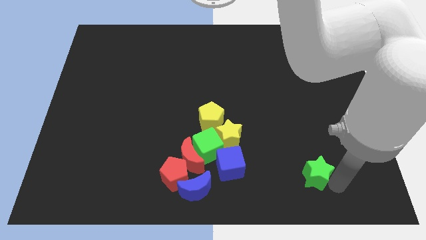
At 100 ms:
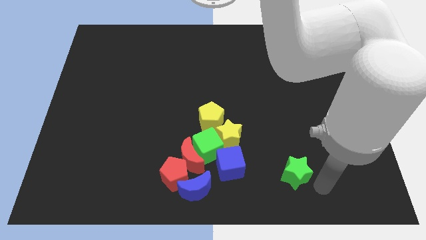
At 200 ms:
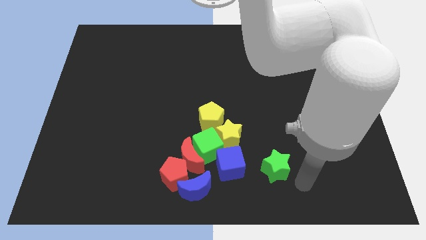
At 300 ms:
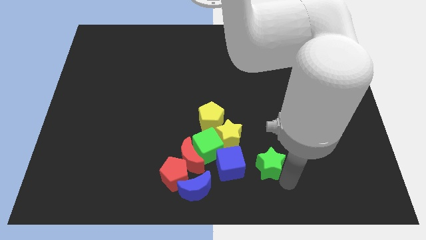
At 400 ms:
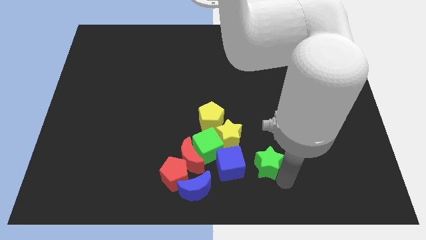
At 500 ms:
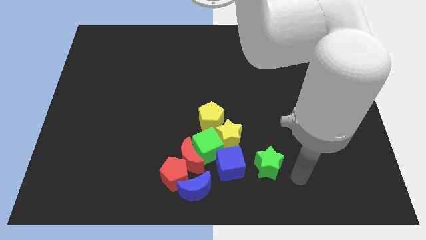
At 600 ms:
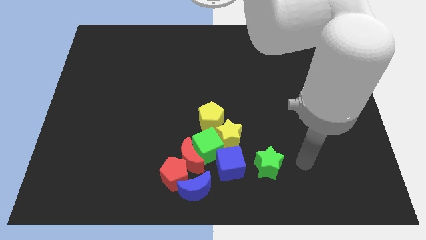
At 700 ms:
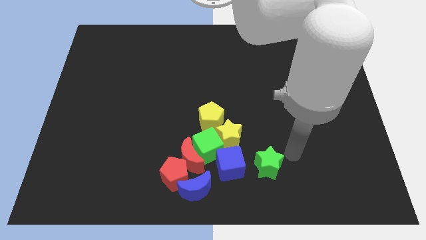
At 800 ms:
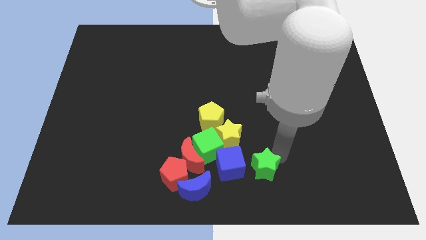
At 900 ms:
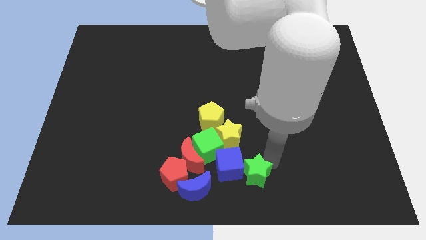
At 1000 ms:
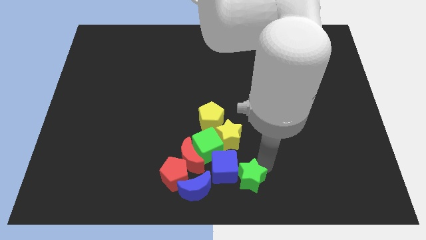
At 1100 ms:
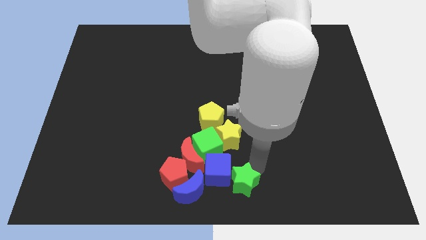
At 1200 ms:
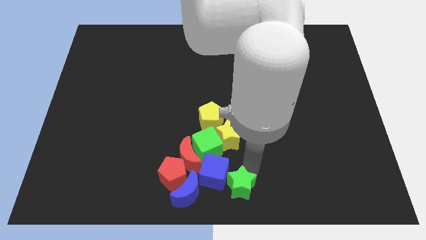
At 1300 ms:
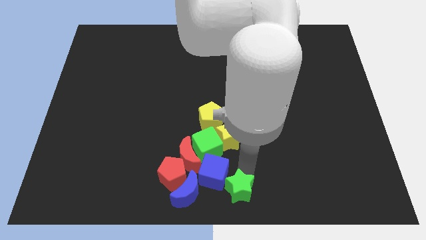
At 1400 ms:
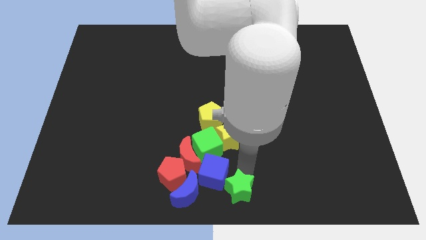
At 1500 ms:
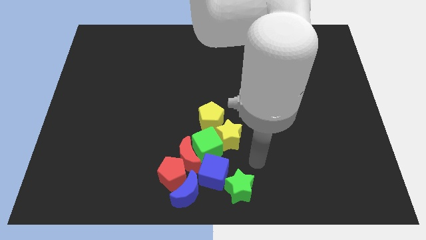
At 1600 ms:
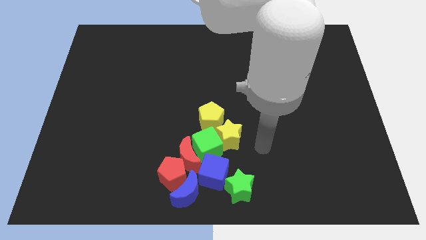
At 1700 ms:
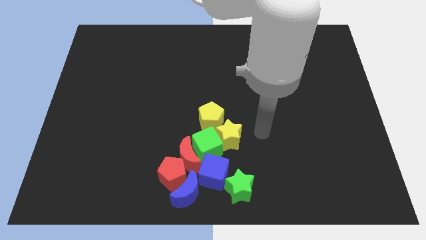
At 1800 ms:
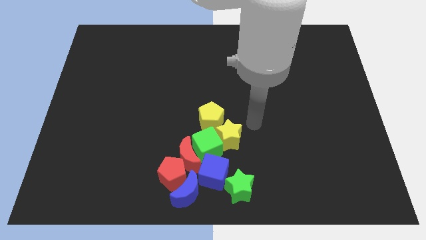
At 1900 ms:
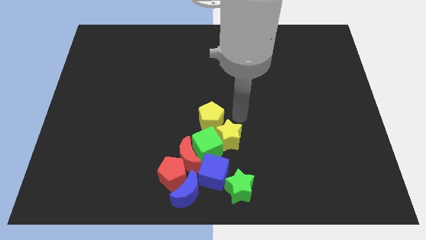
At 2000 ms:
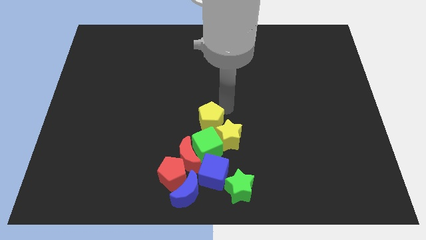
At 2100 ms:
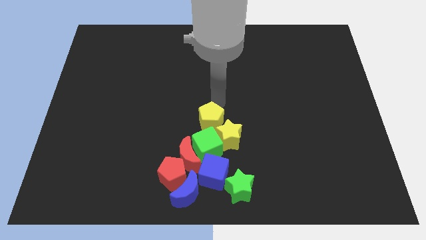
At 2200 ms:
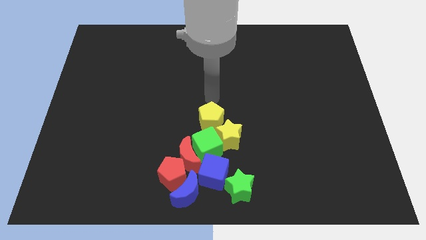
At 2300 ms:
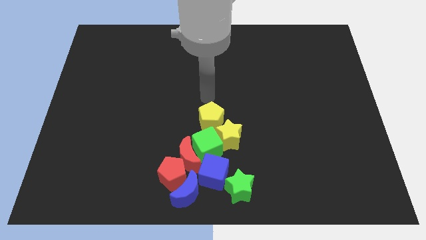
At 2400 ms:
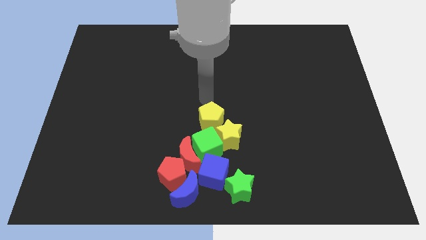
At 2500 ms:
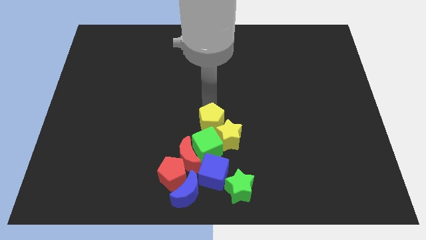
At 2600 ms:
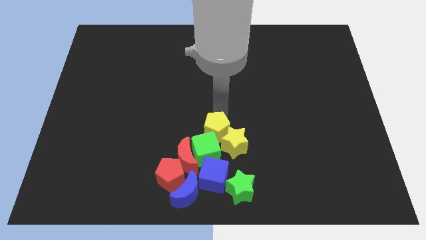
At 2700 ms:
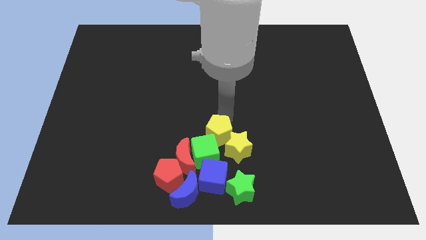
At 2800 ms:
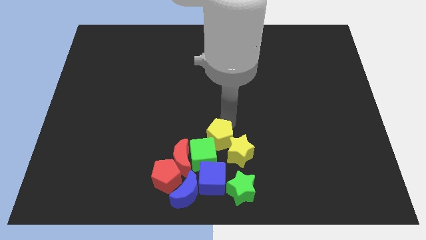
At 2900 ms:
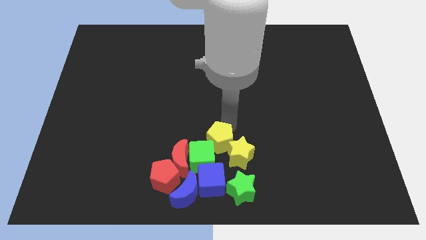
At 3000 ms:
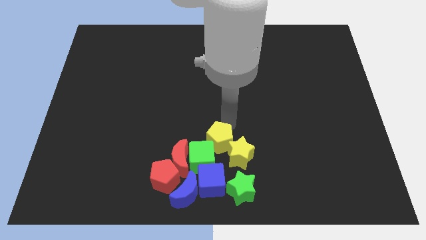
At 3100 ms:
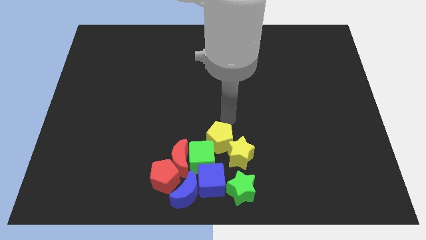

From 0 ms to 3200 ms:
adjust the group of blocks at the bottom center

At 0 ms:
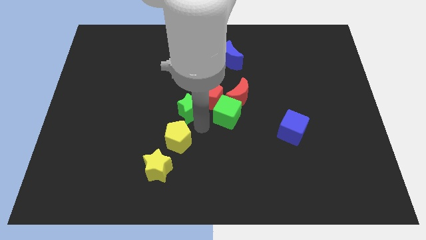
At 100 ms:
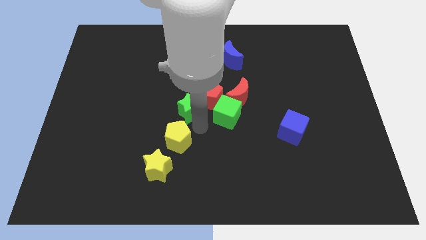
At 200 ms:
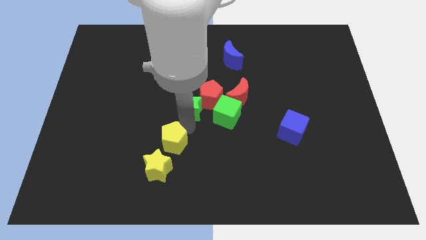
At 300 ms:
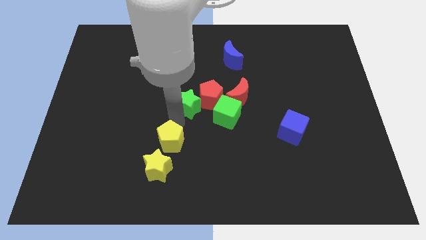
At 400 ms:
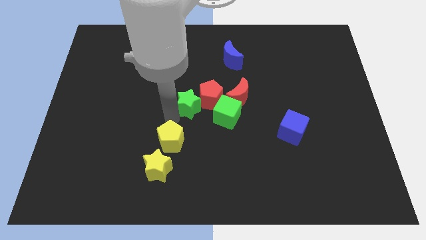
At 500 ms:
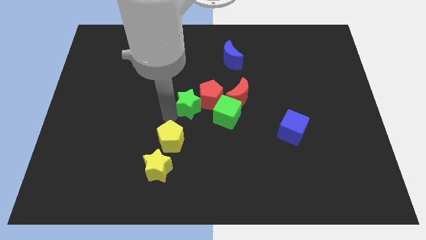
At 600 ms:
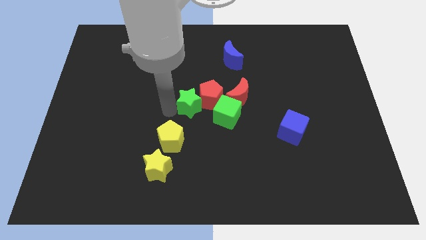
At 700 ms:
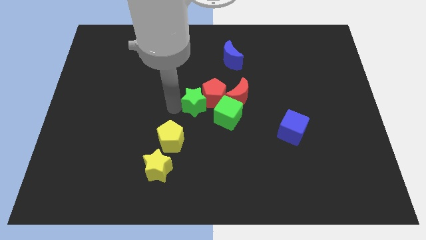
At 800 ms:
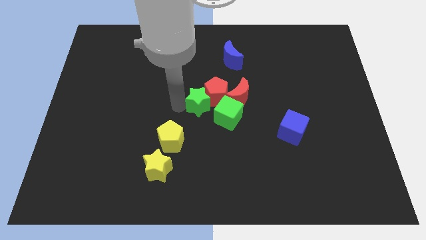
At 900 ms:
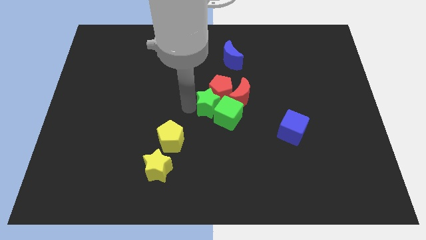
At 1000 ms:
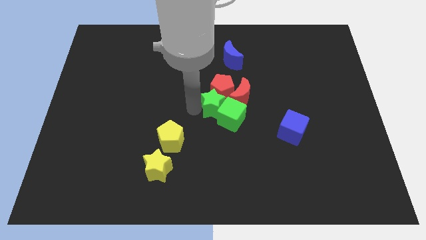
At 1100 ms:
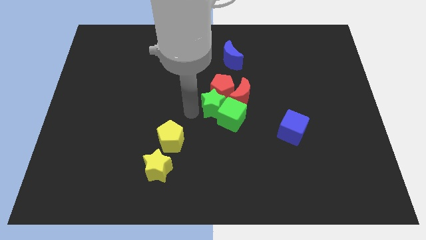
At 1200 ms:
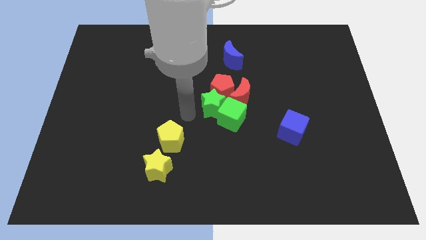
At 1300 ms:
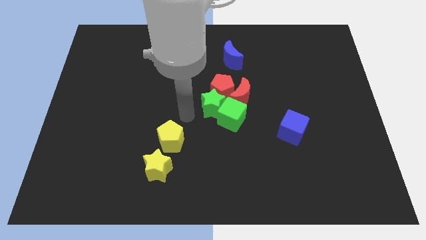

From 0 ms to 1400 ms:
push the green star in to the red pentagon

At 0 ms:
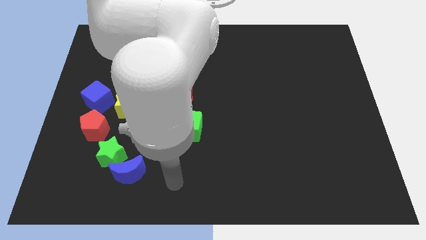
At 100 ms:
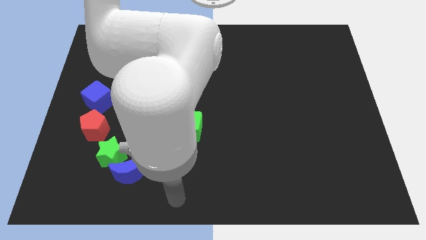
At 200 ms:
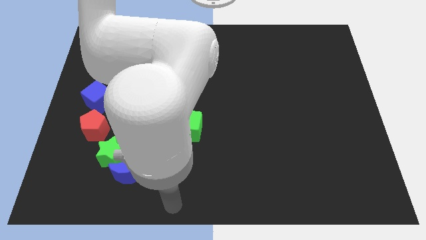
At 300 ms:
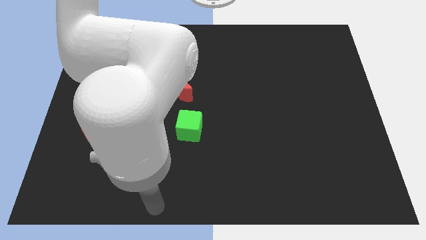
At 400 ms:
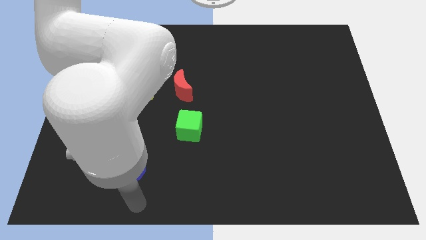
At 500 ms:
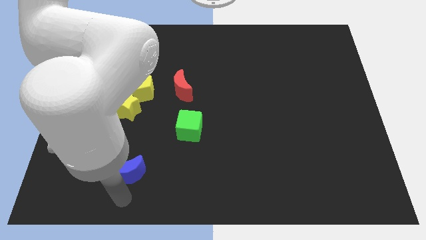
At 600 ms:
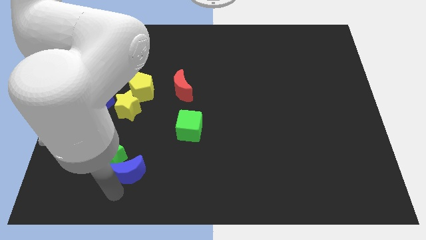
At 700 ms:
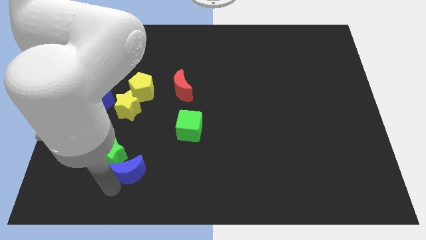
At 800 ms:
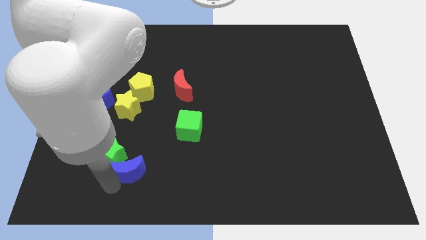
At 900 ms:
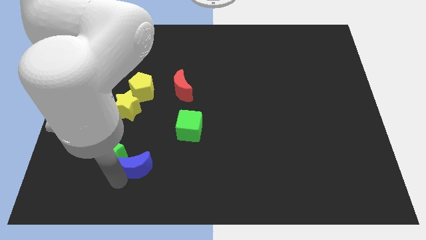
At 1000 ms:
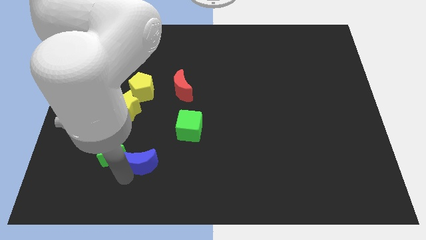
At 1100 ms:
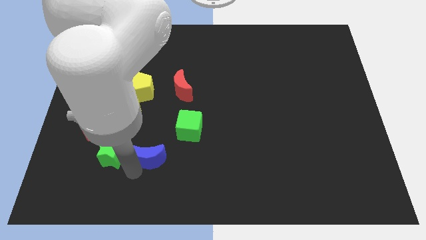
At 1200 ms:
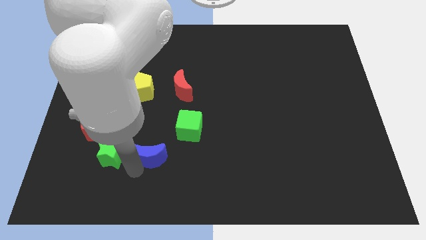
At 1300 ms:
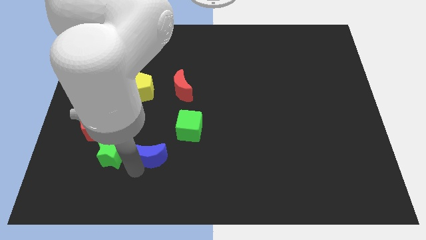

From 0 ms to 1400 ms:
place blue moon to the right of green star

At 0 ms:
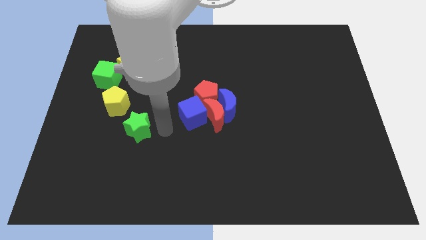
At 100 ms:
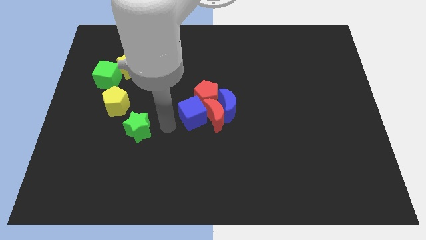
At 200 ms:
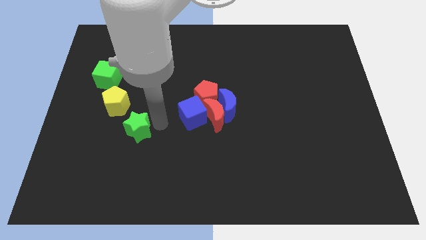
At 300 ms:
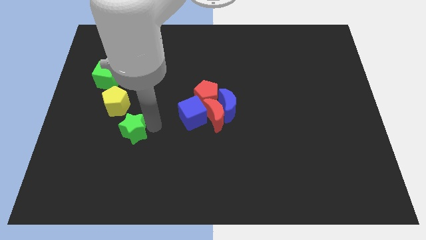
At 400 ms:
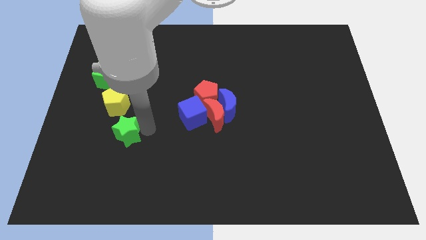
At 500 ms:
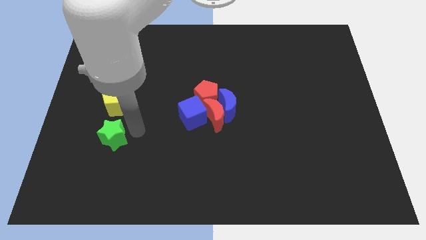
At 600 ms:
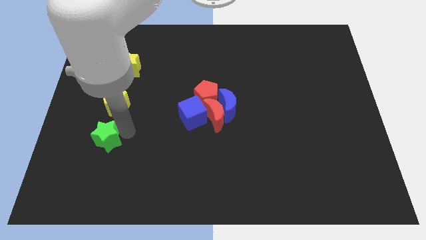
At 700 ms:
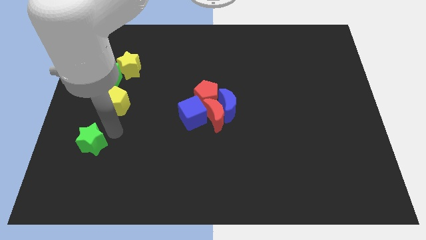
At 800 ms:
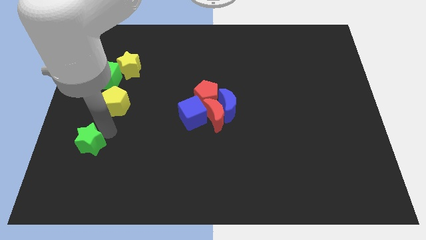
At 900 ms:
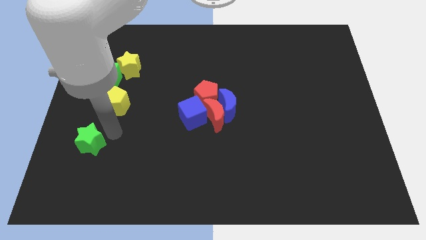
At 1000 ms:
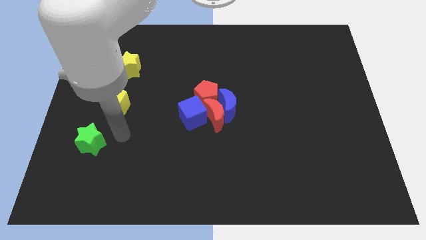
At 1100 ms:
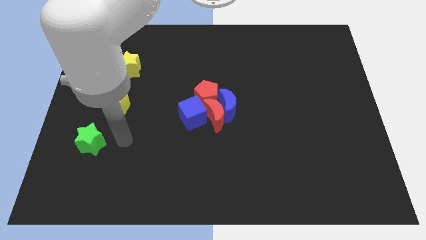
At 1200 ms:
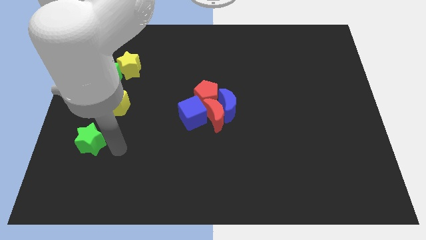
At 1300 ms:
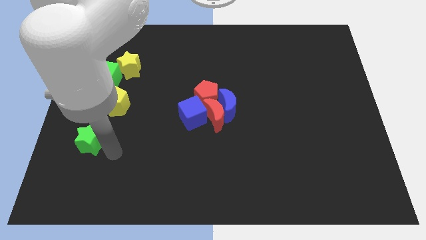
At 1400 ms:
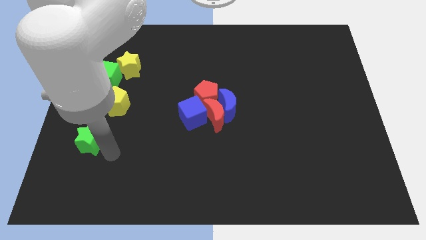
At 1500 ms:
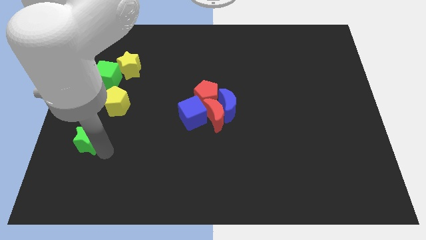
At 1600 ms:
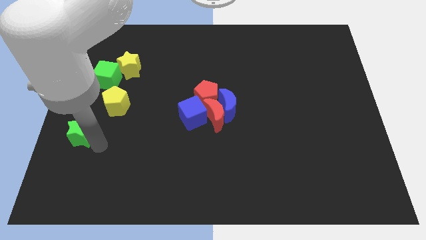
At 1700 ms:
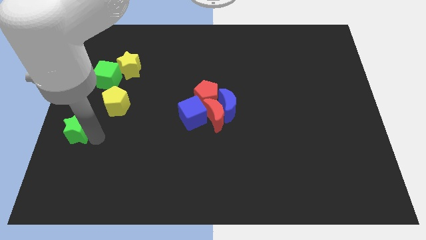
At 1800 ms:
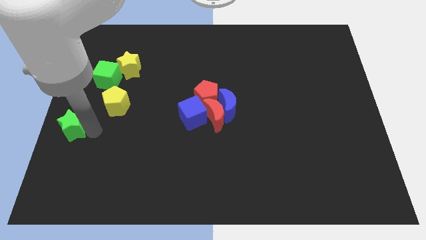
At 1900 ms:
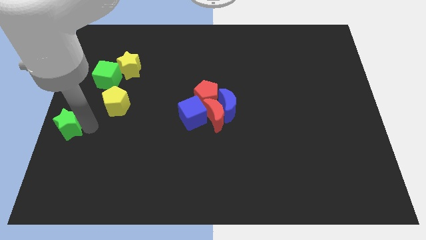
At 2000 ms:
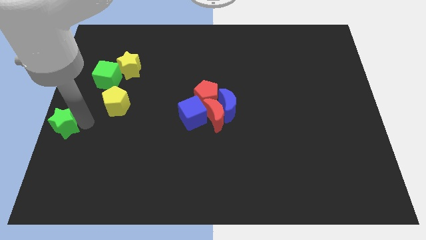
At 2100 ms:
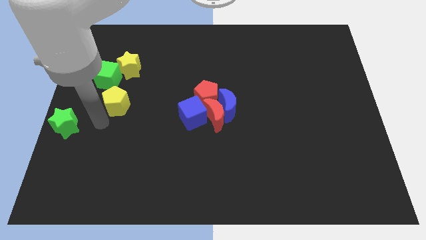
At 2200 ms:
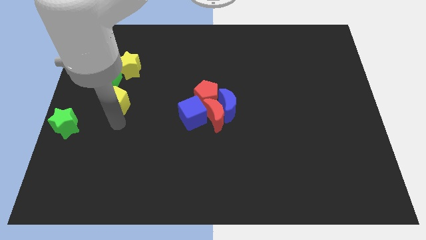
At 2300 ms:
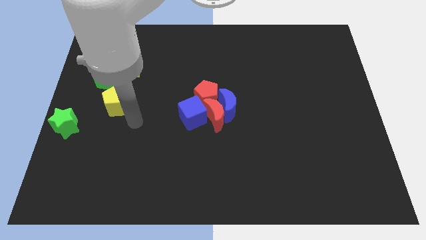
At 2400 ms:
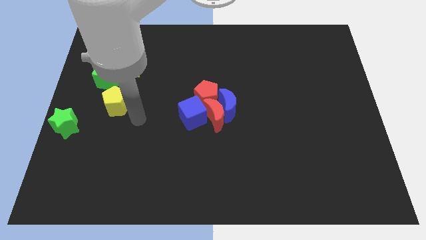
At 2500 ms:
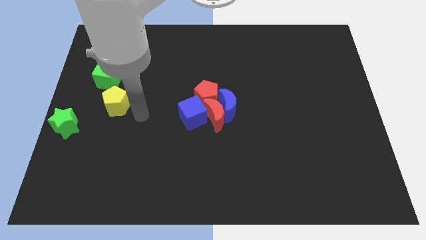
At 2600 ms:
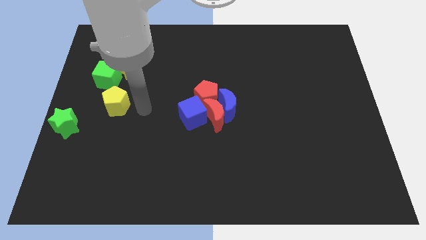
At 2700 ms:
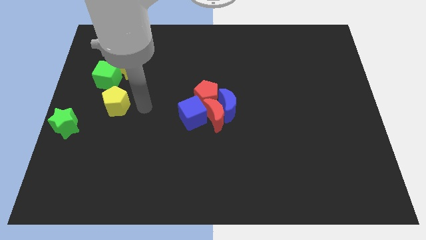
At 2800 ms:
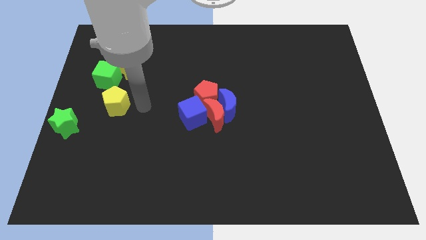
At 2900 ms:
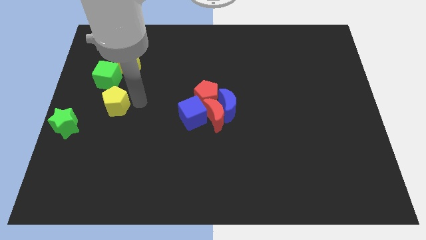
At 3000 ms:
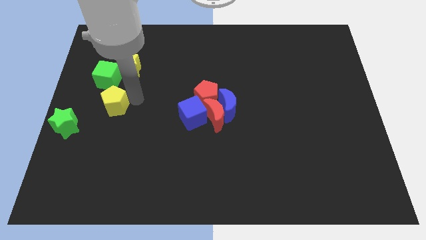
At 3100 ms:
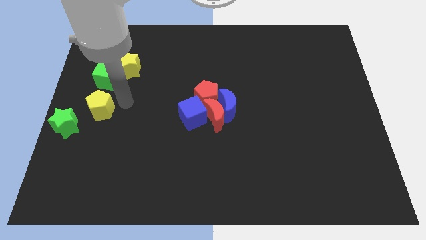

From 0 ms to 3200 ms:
move the green star to the center left
